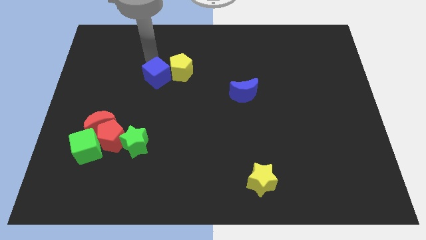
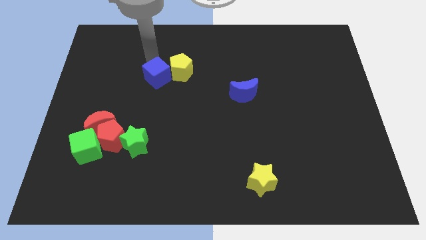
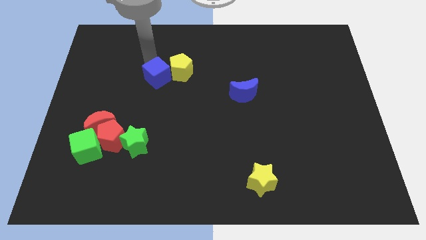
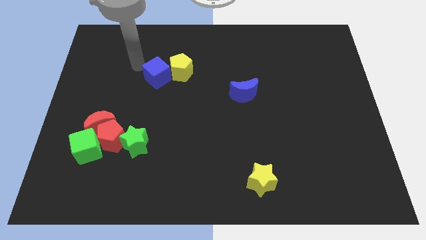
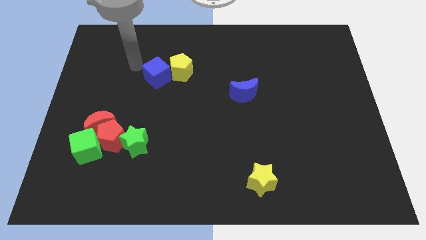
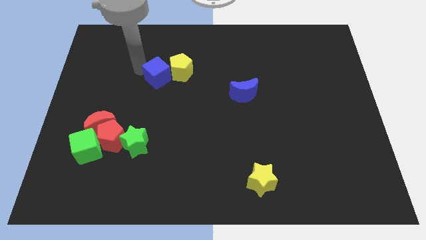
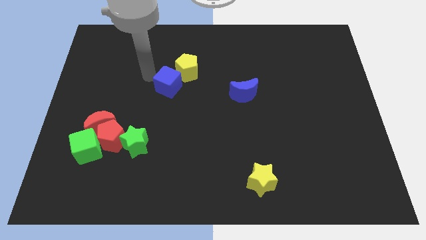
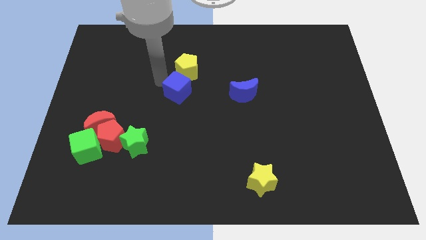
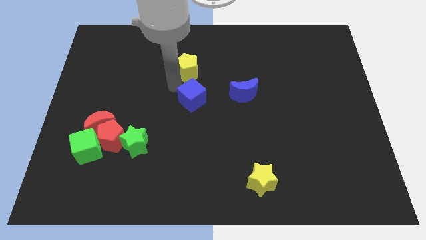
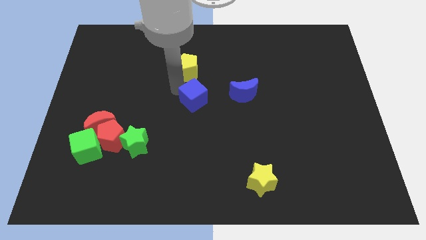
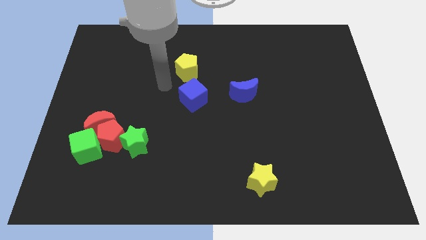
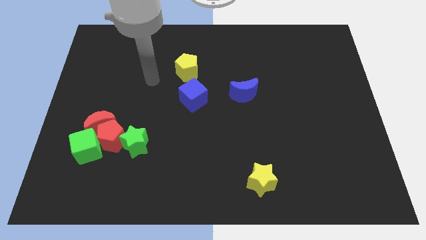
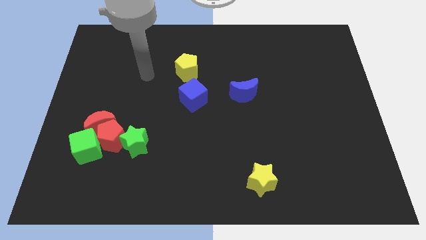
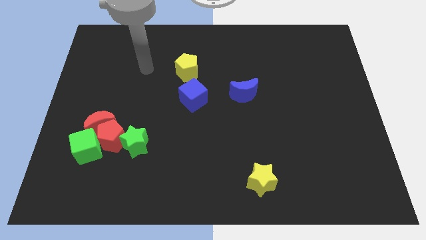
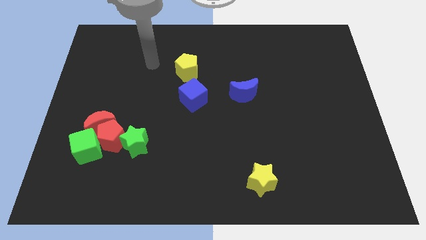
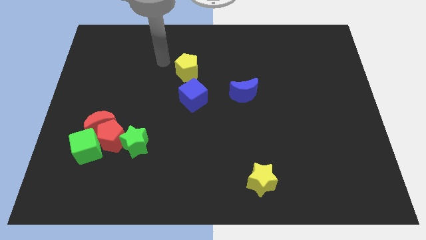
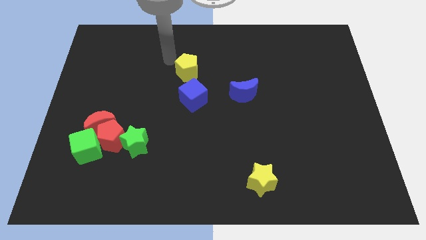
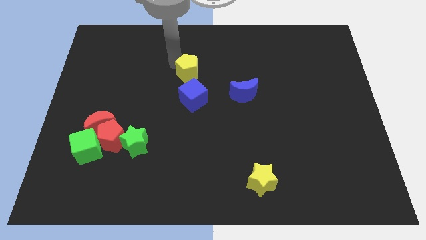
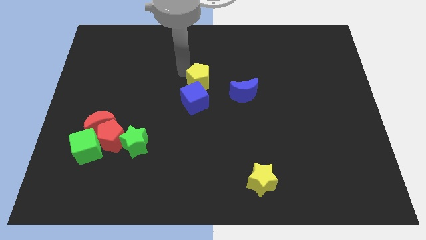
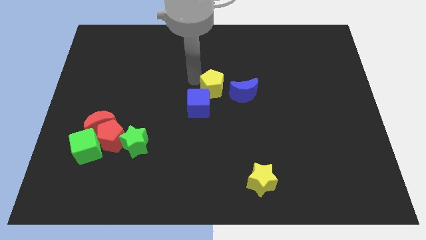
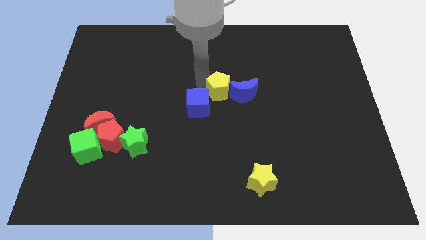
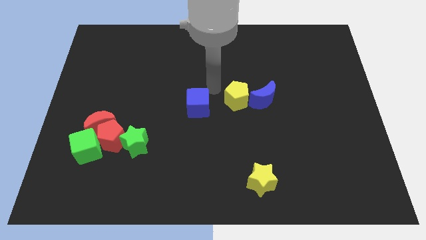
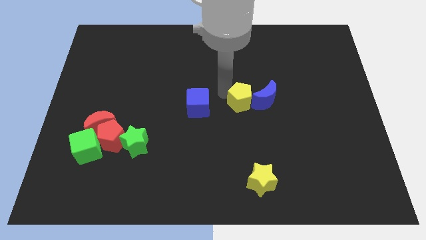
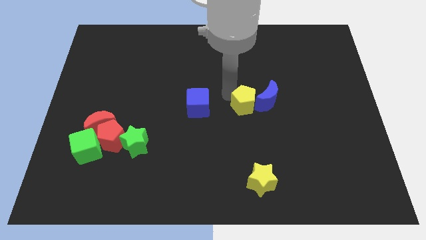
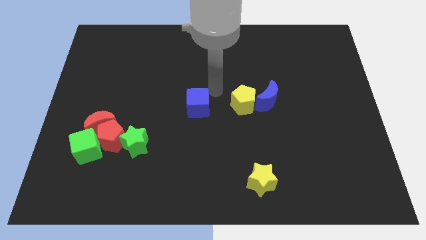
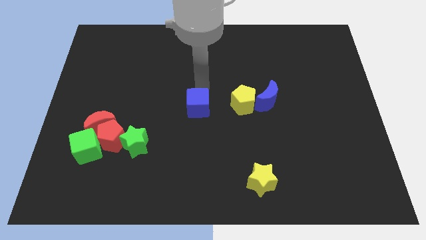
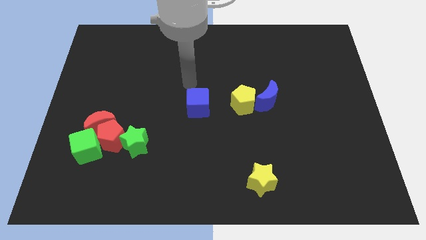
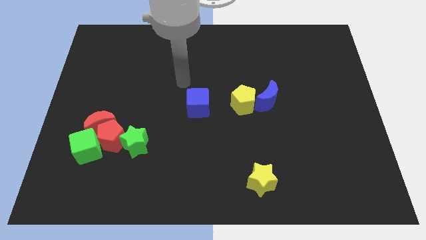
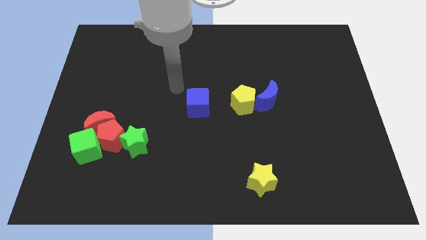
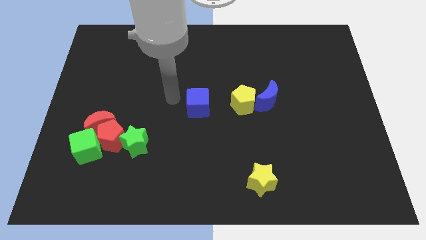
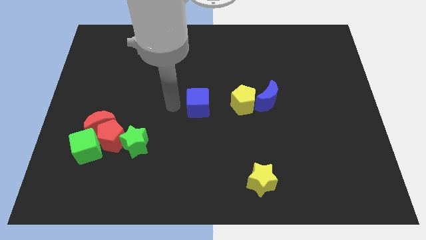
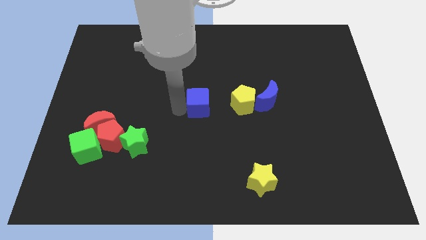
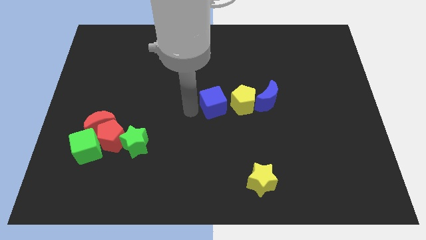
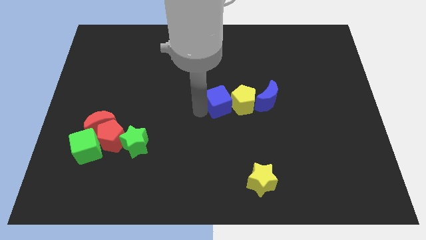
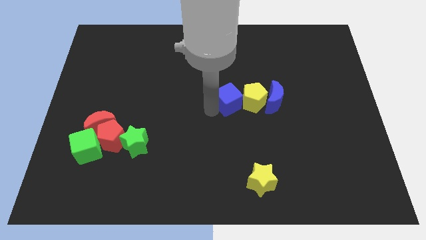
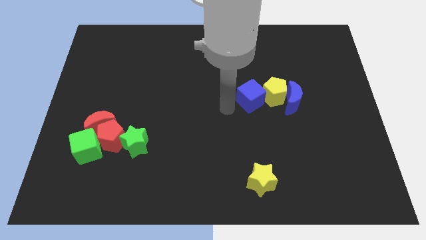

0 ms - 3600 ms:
push the yellow pentagon and blue cube to the left of blue crescent

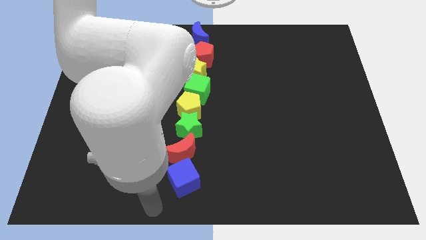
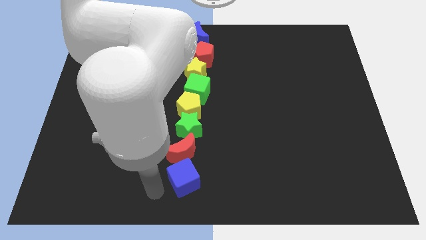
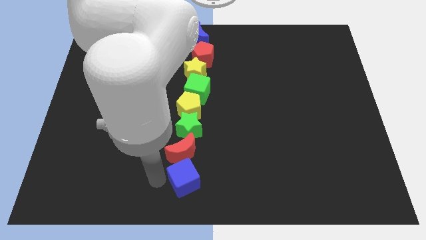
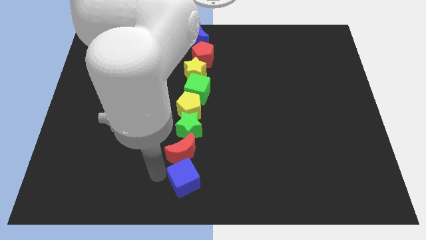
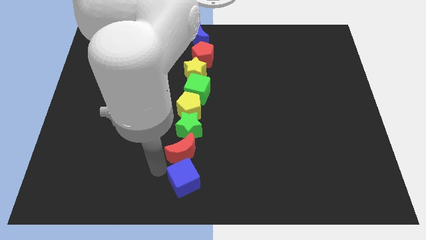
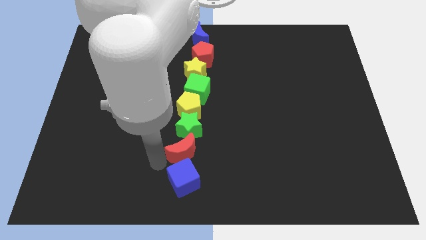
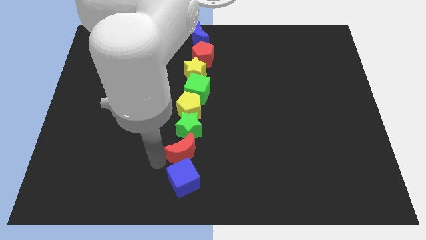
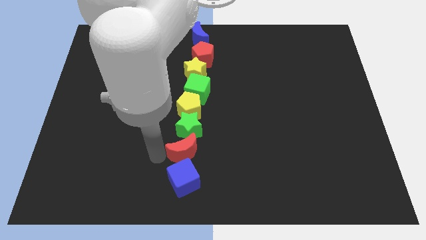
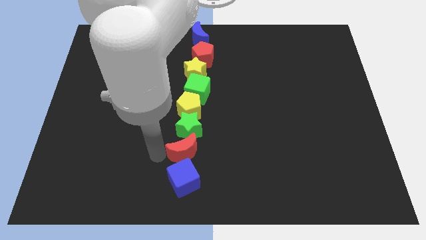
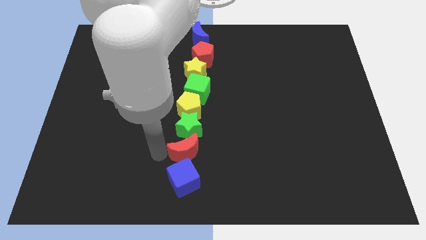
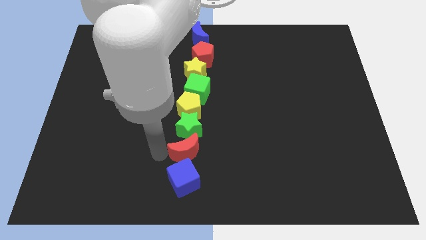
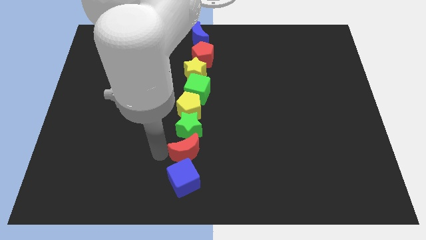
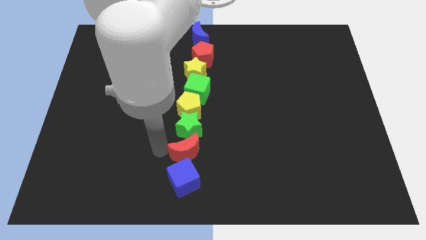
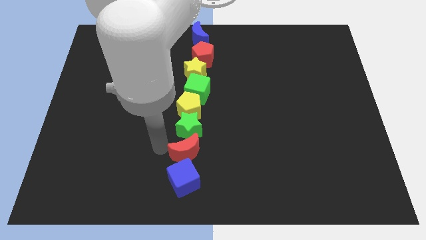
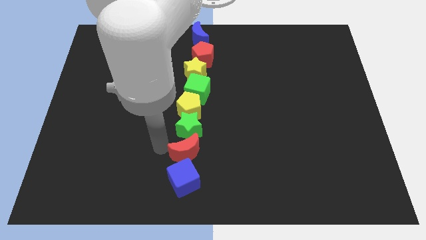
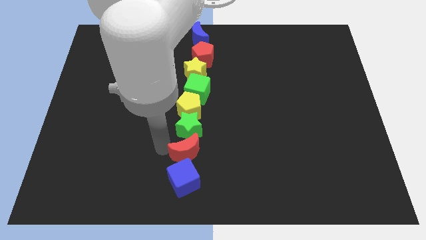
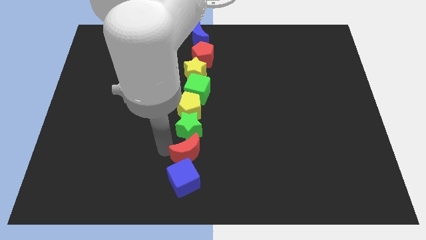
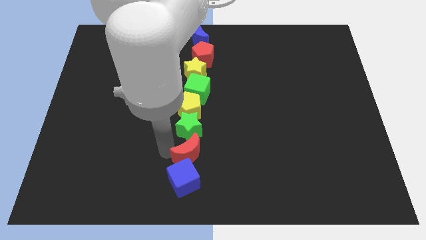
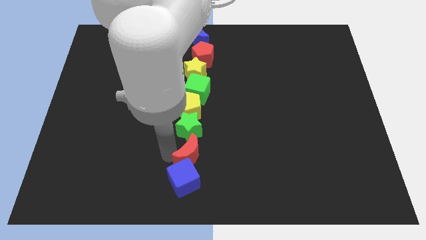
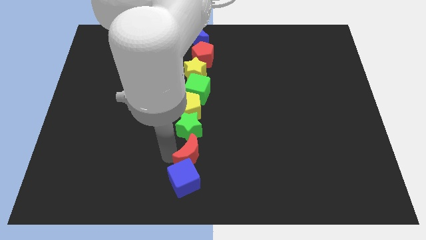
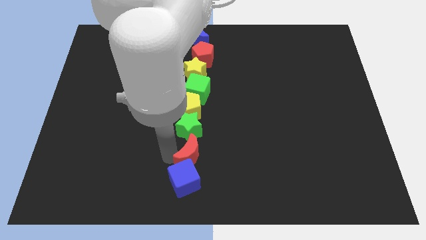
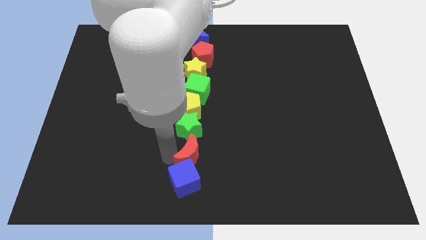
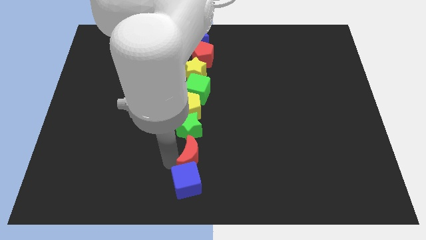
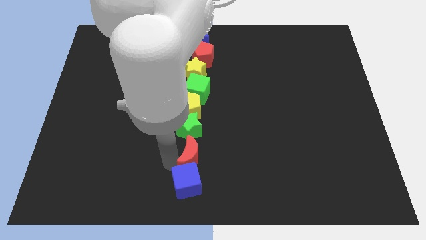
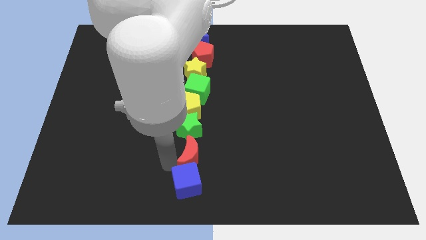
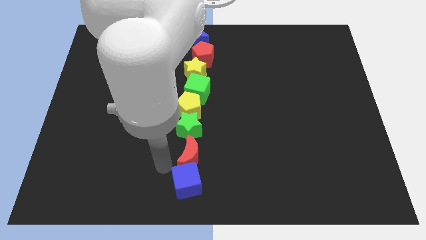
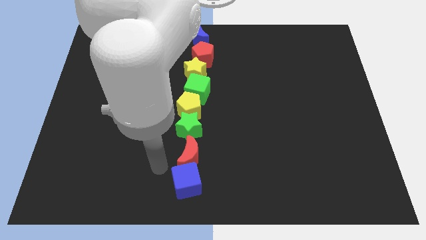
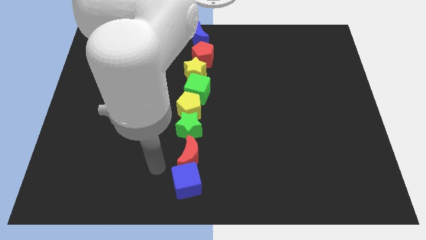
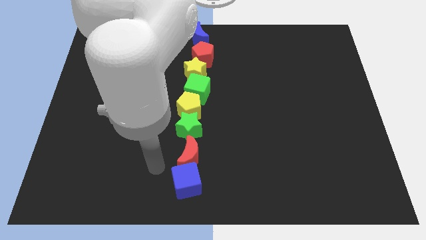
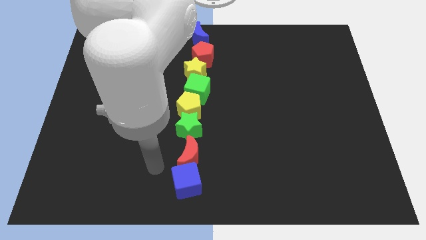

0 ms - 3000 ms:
place the red crescent correctly which is bottom of green star

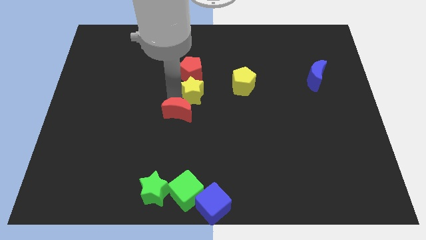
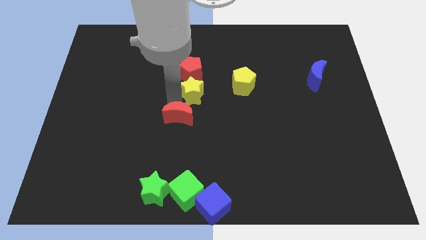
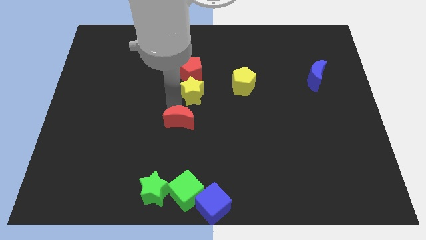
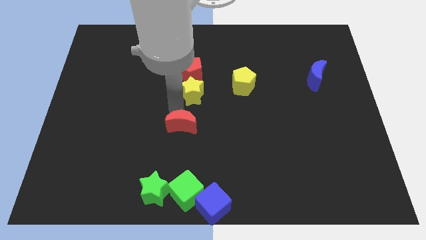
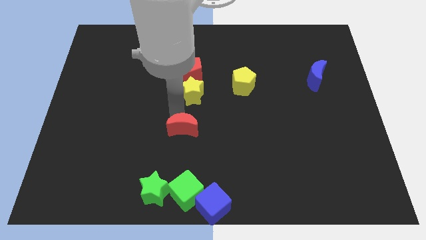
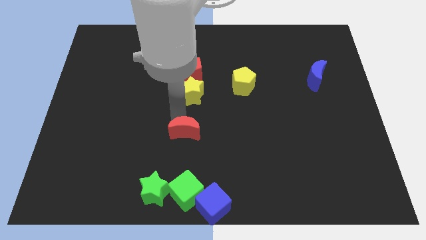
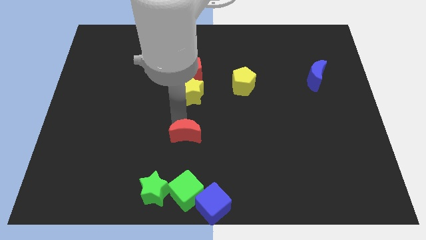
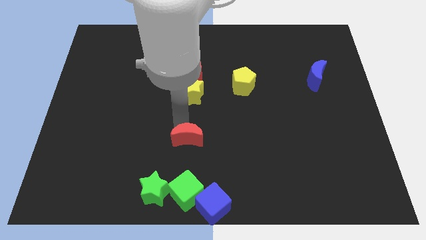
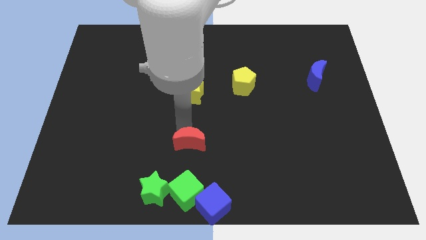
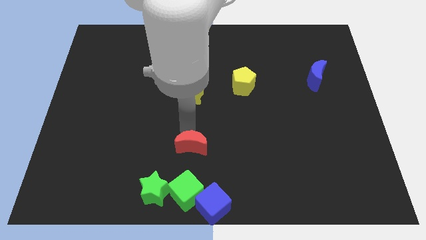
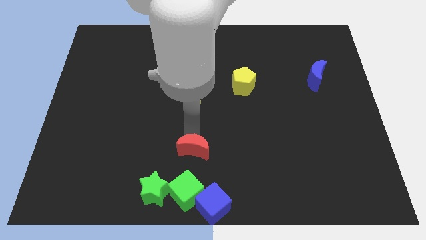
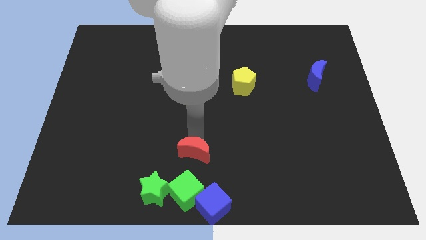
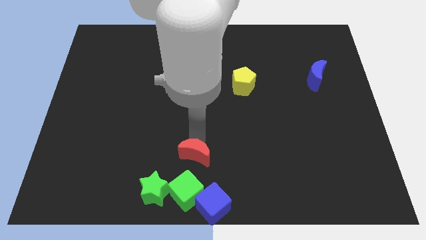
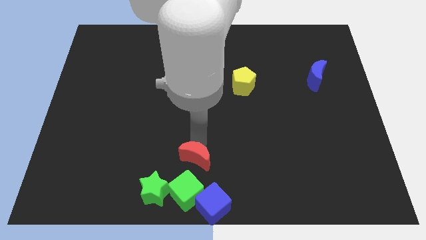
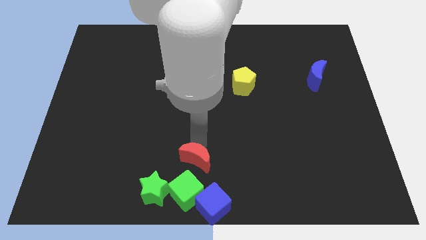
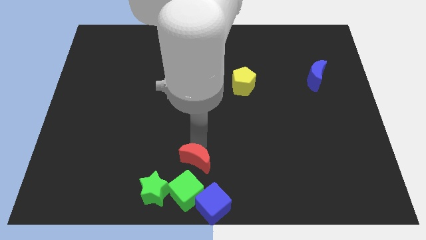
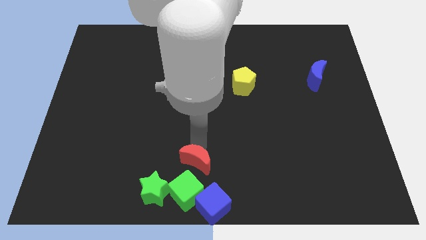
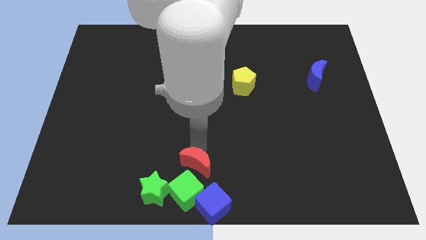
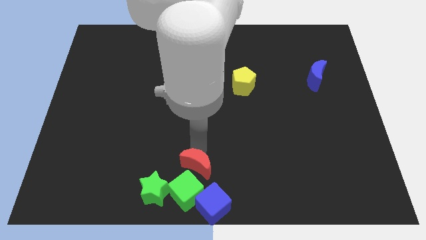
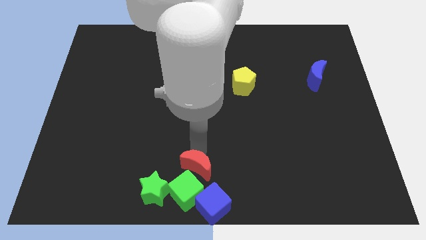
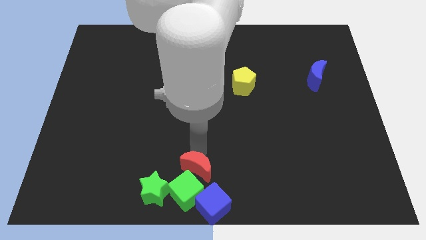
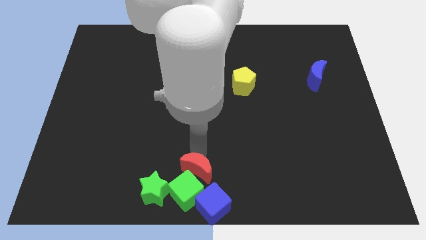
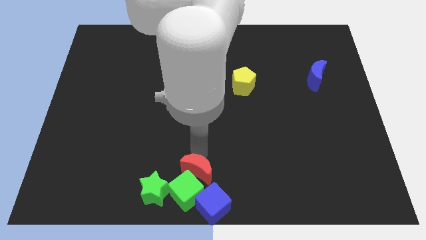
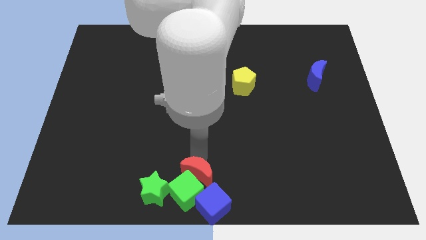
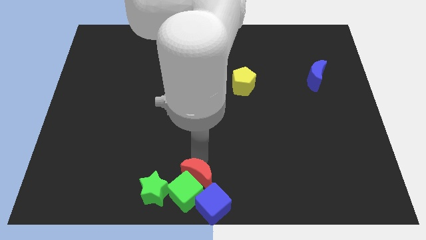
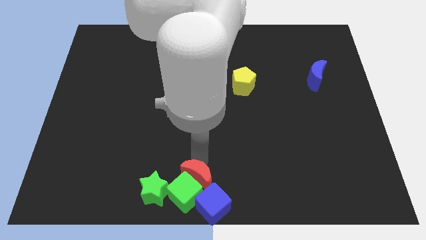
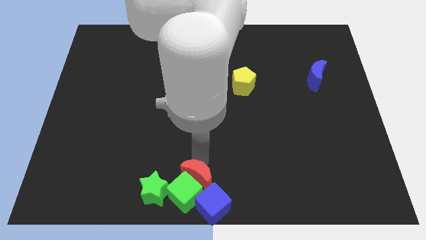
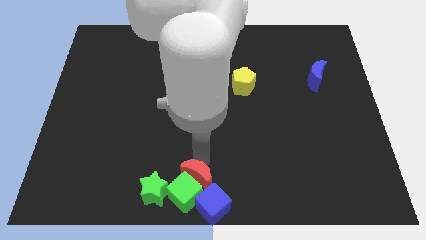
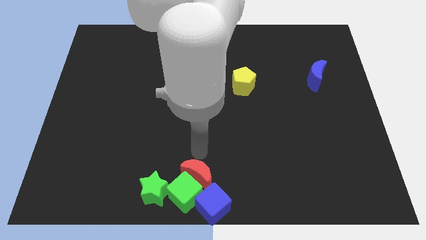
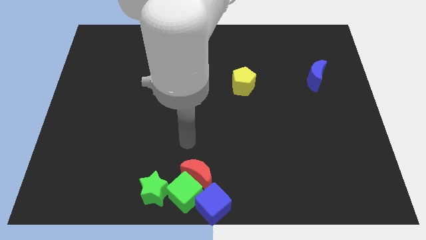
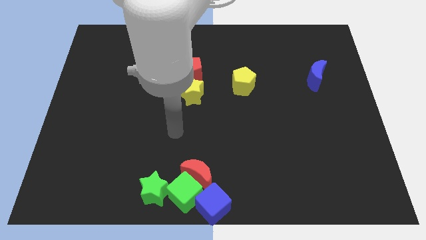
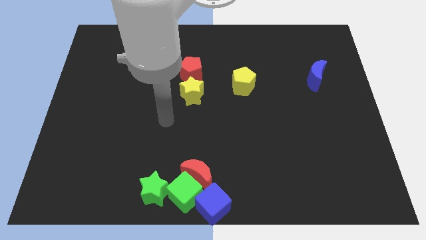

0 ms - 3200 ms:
move the red crescent to the top right of the green star
